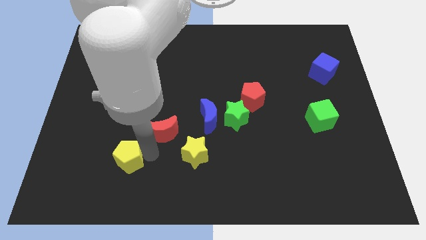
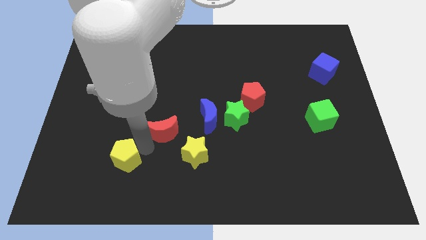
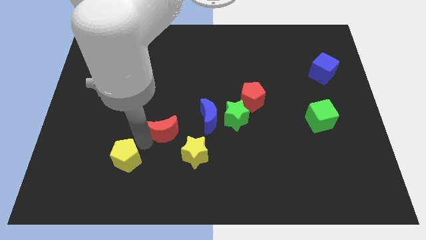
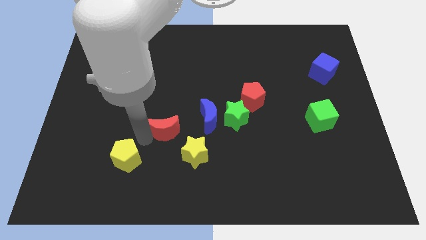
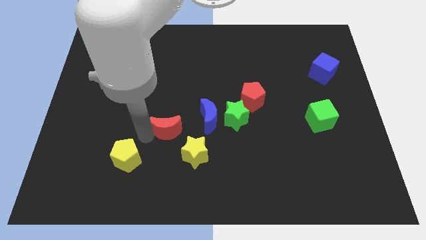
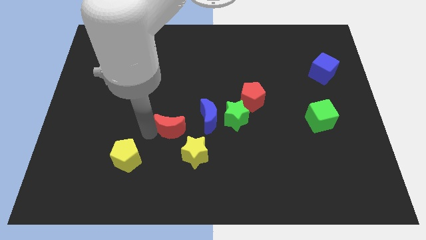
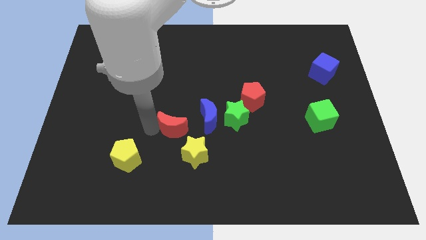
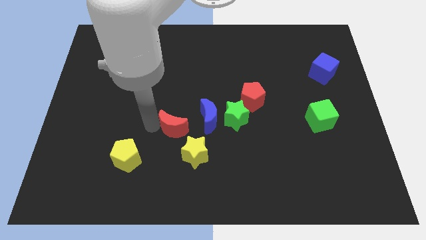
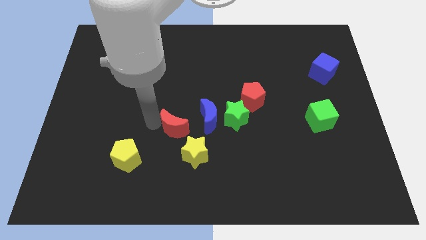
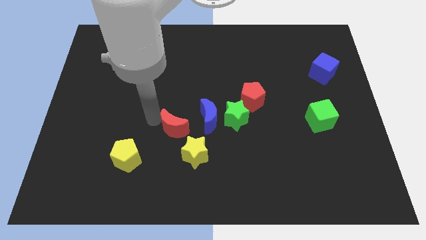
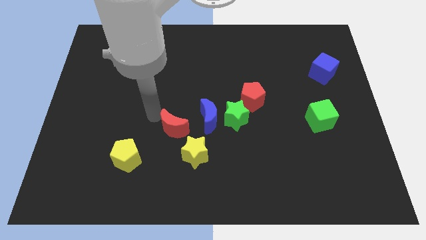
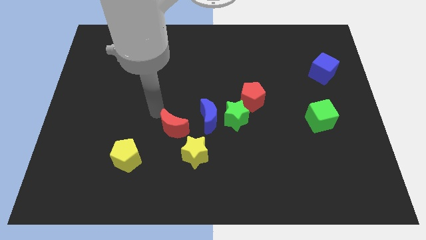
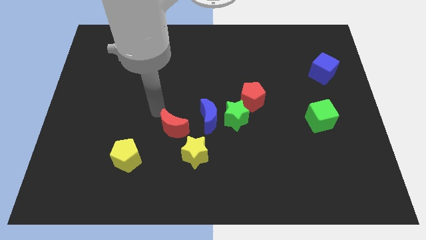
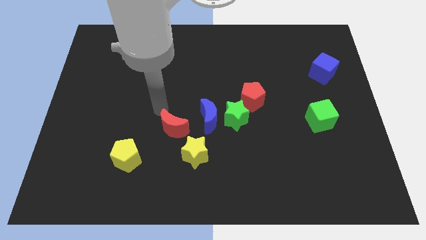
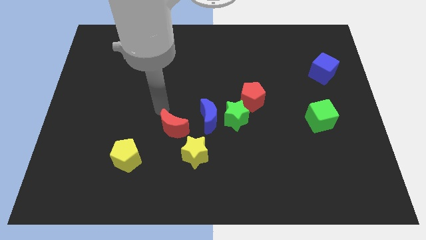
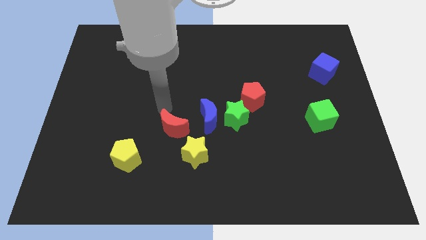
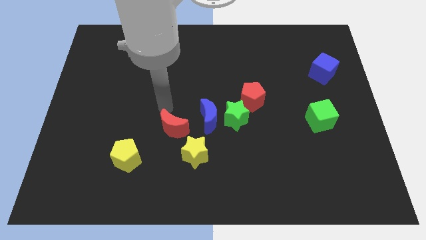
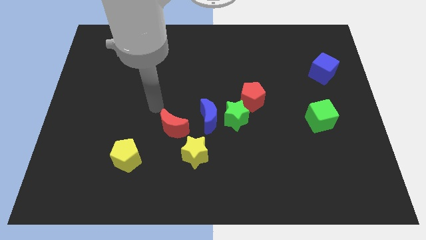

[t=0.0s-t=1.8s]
place the red crescent to the left side of the blue crescent

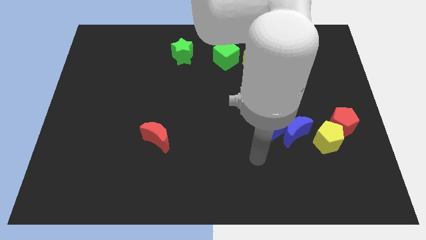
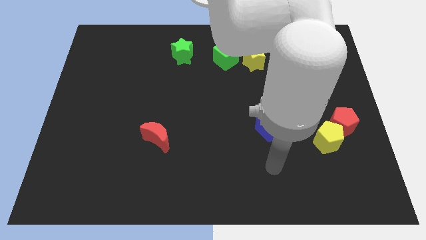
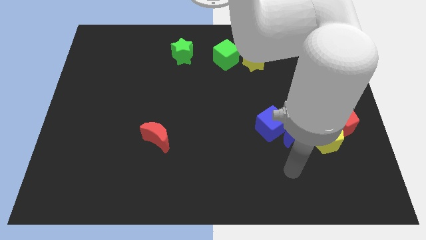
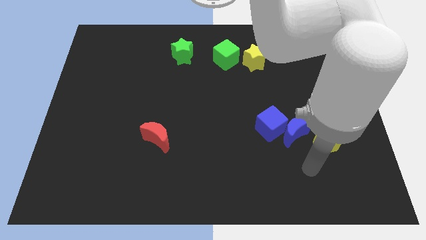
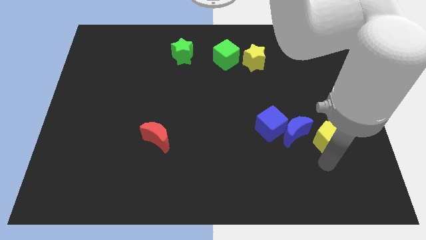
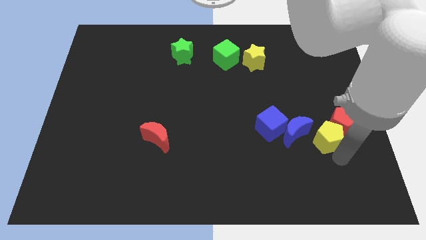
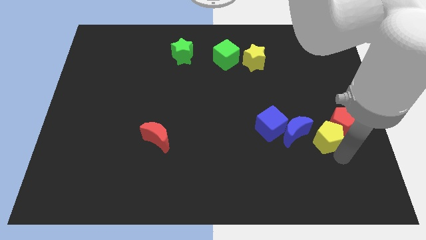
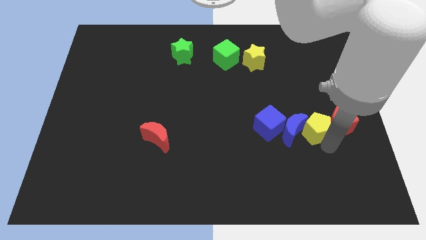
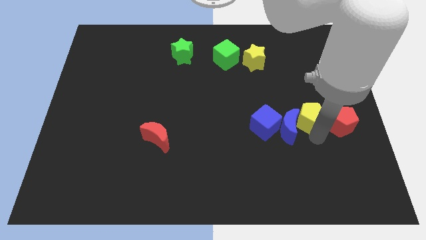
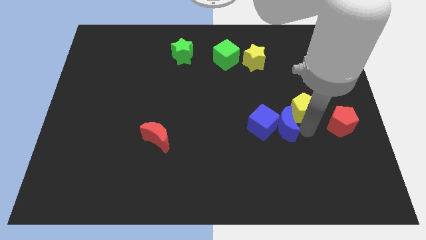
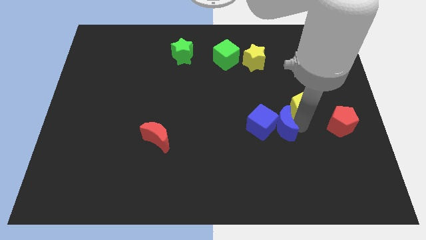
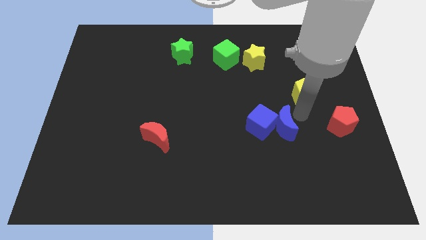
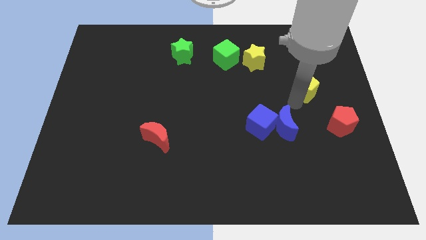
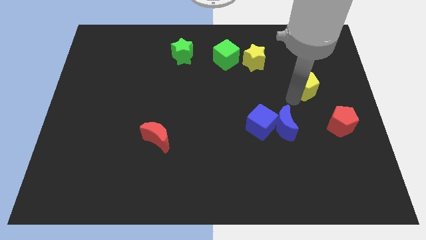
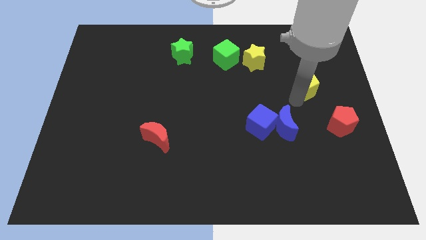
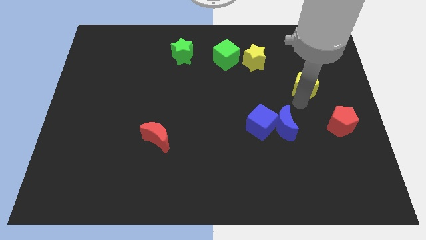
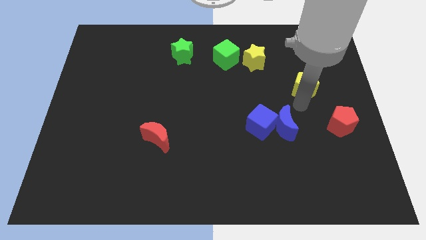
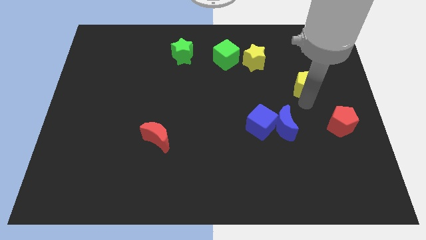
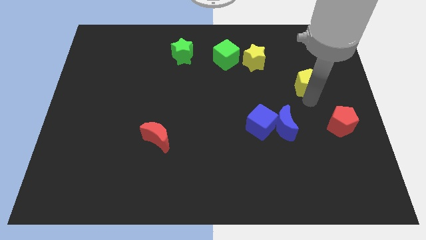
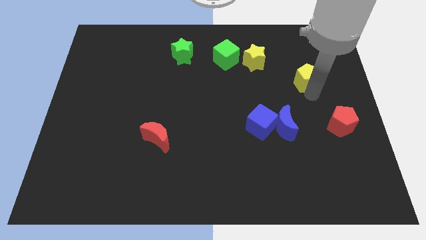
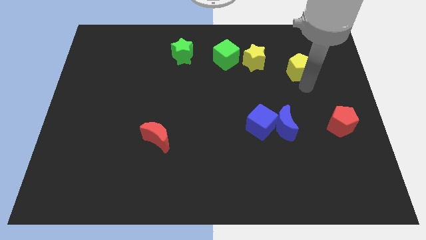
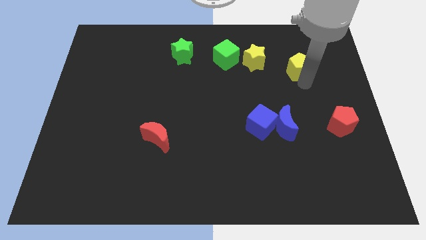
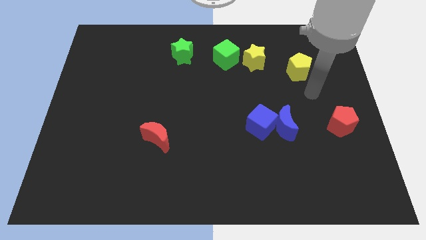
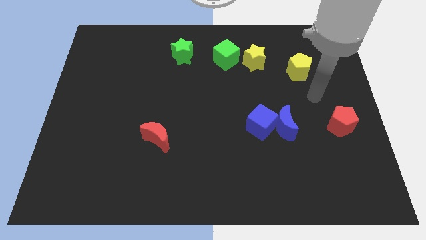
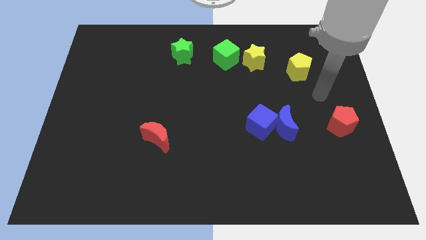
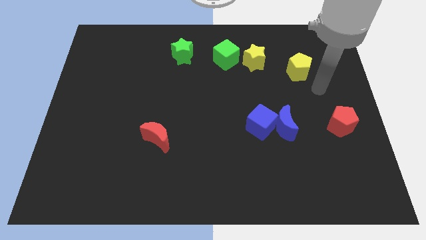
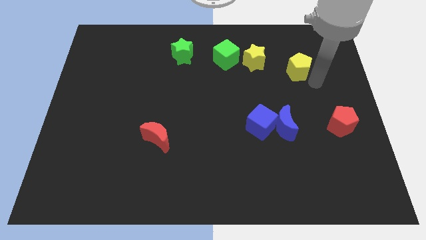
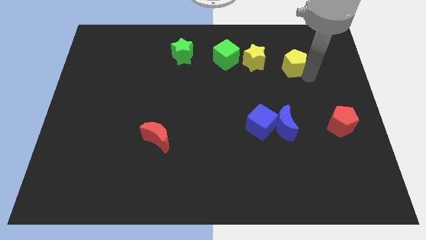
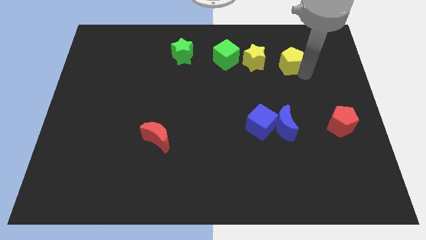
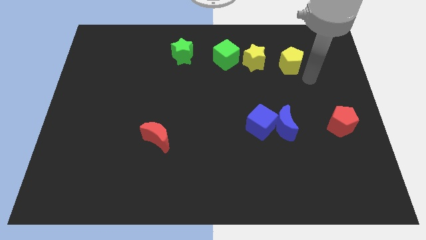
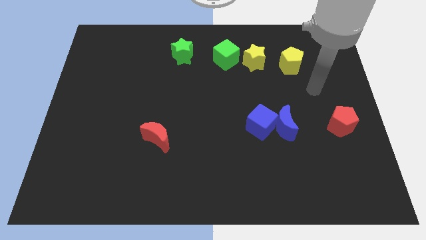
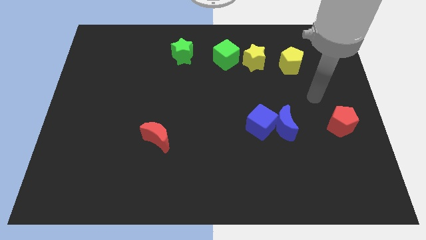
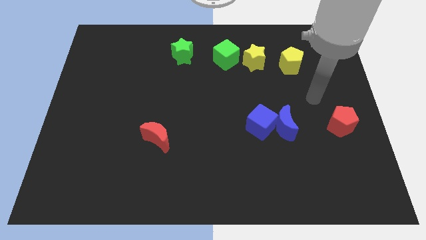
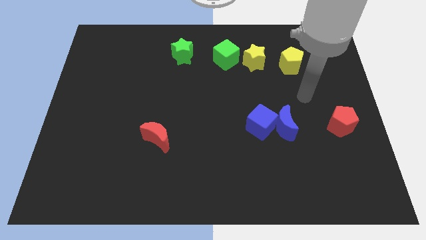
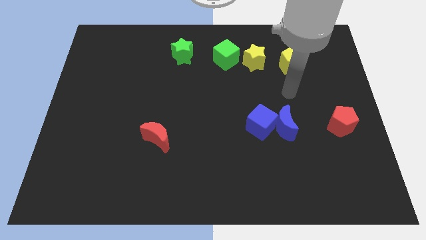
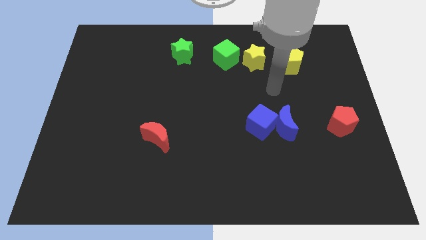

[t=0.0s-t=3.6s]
put the yellow pentagon to the right side of the yellow star

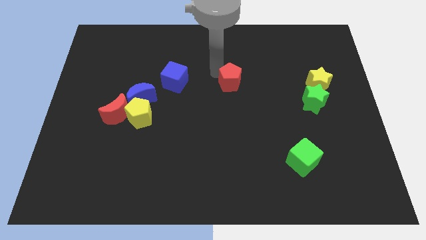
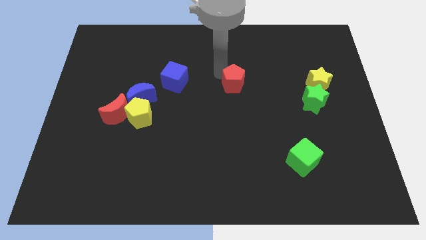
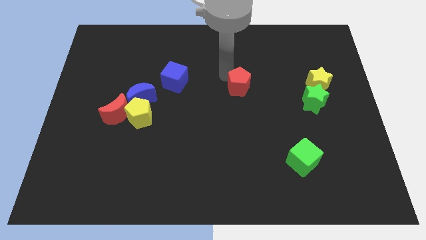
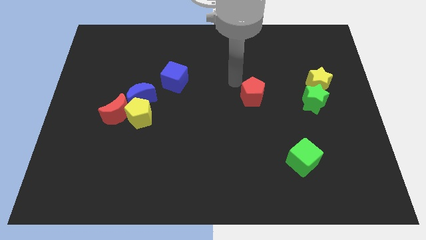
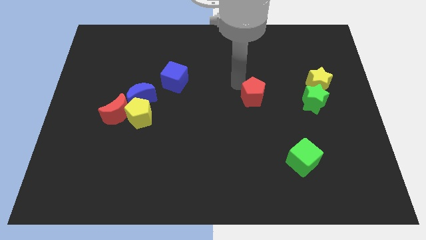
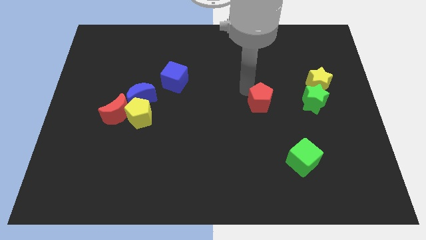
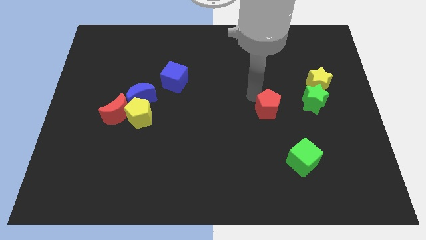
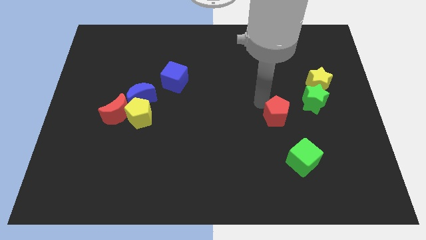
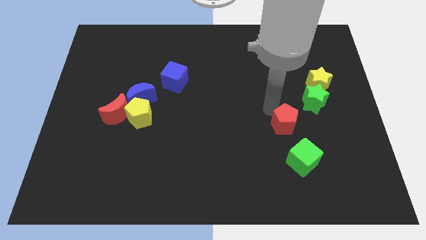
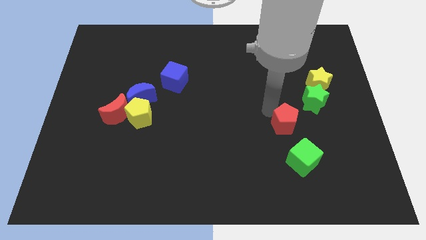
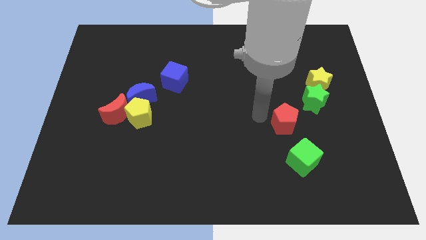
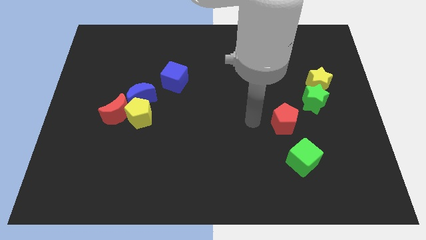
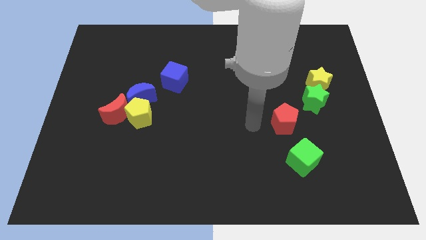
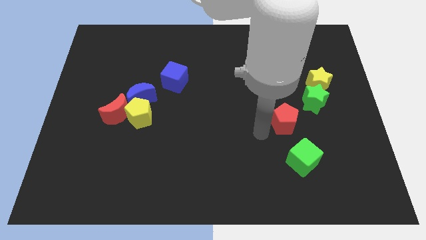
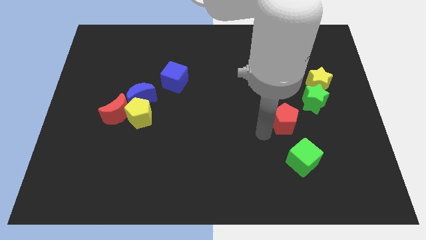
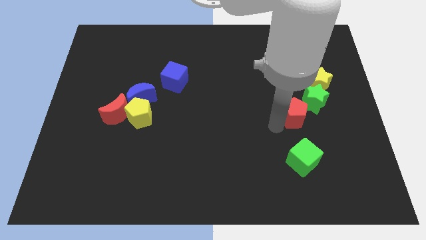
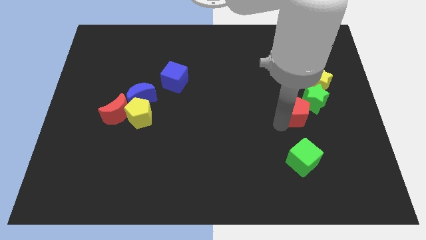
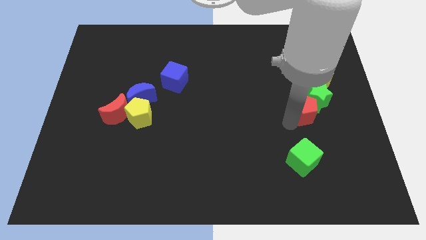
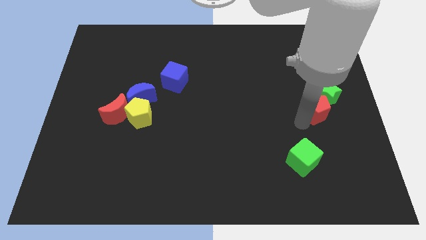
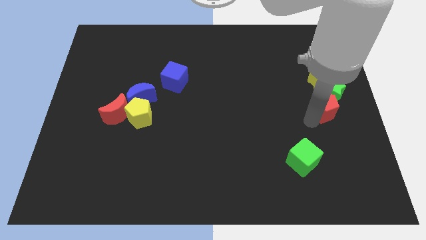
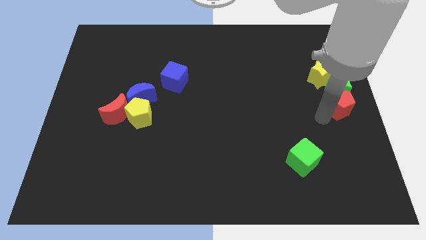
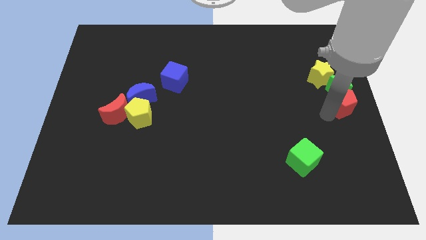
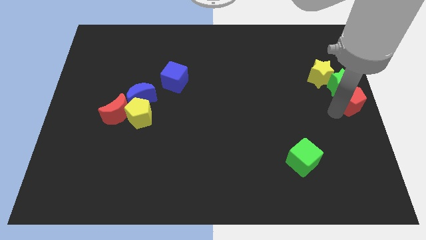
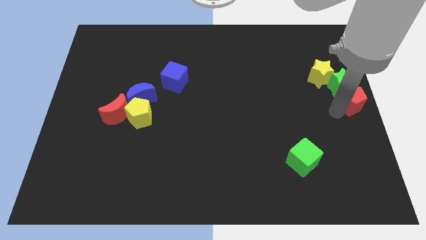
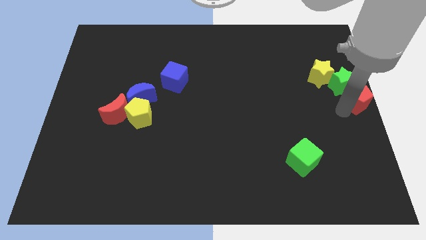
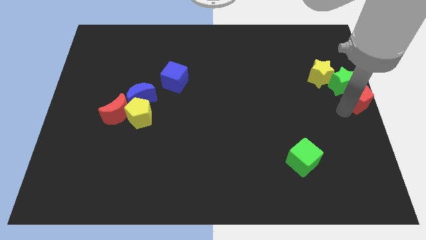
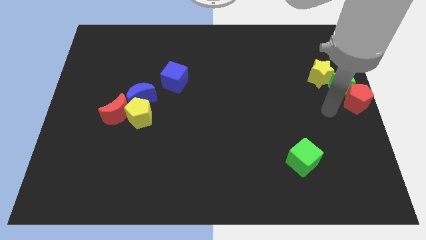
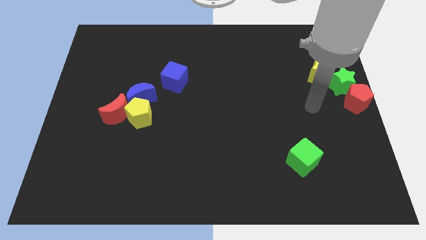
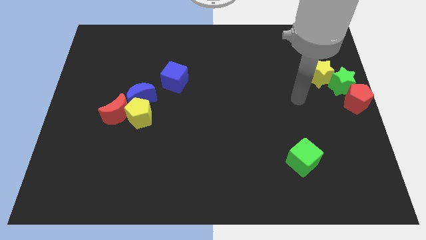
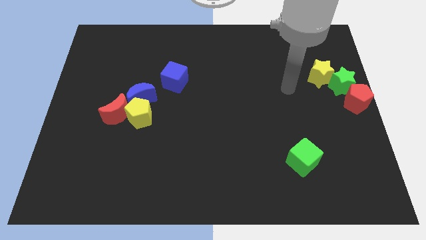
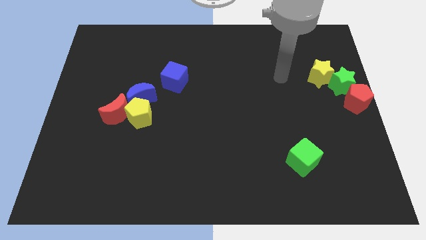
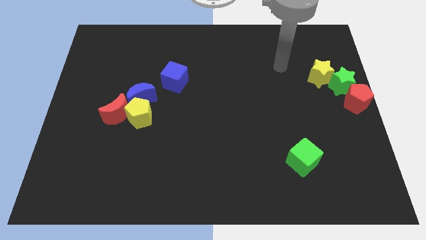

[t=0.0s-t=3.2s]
place the red pentagon to the center right of the board

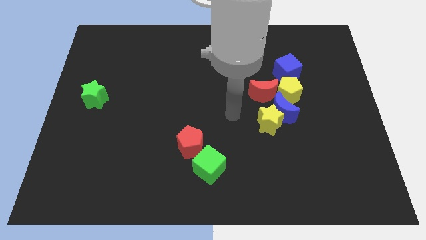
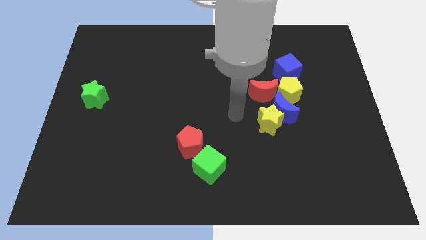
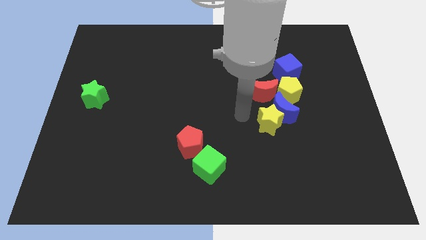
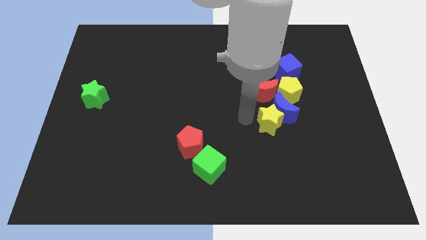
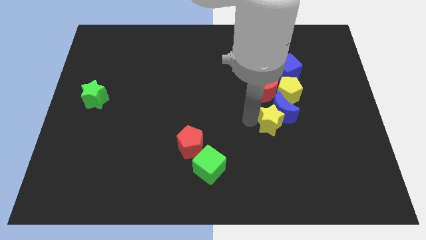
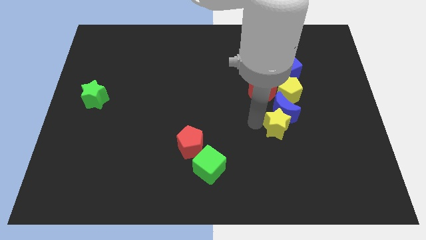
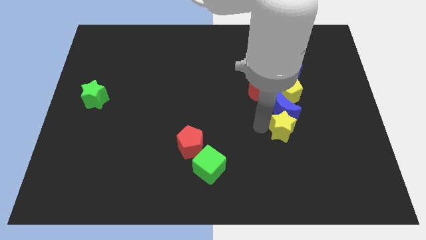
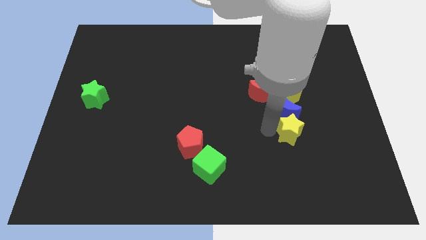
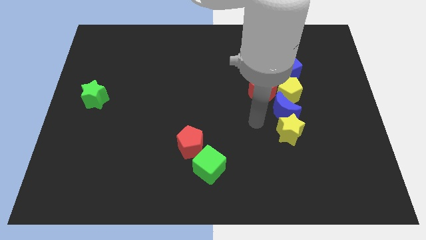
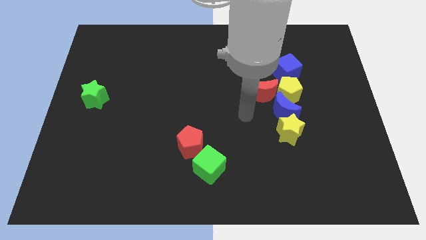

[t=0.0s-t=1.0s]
place yellow star to the bottom of blue moon
